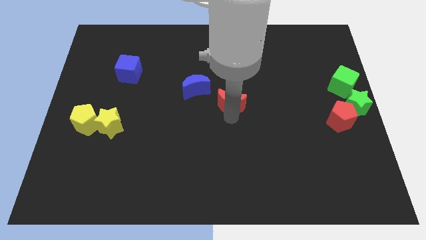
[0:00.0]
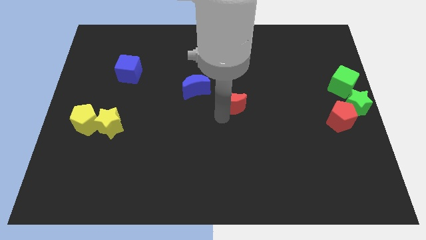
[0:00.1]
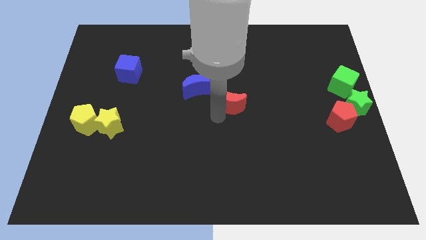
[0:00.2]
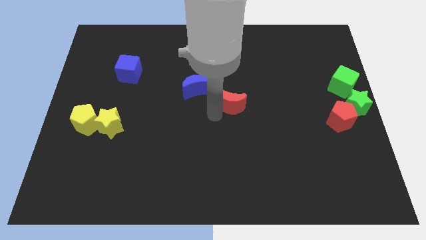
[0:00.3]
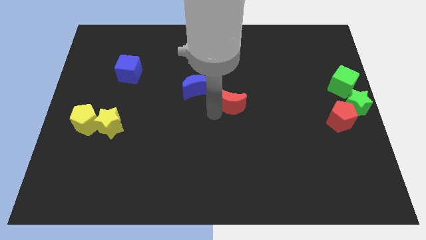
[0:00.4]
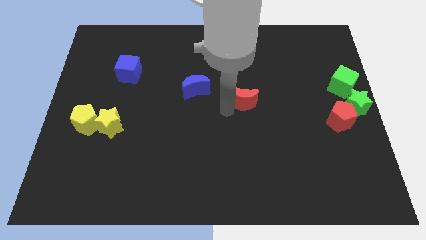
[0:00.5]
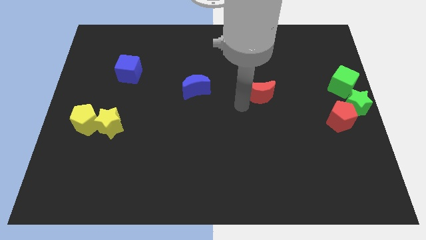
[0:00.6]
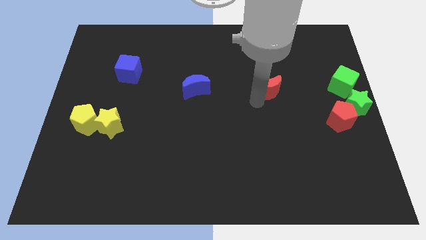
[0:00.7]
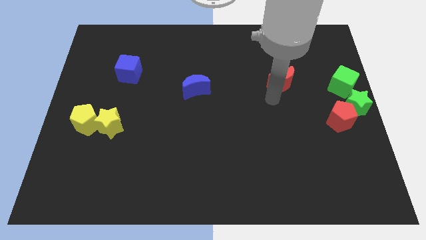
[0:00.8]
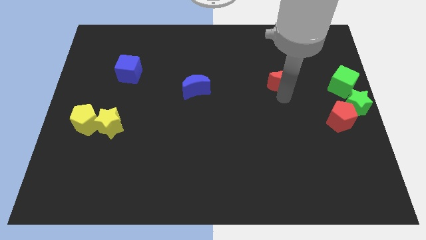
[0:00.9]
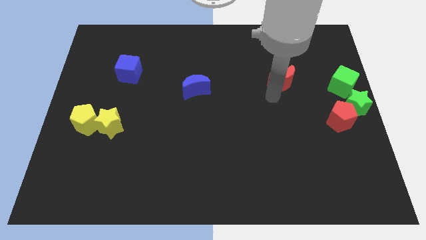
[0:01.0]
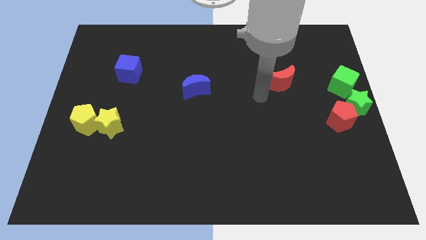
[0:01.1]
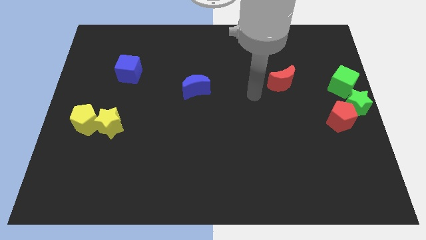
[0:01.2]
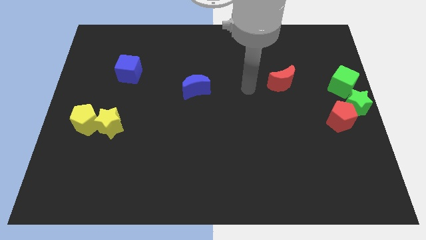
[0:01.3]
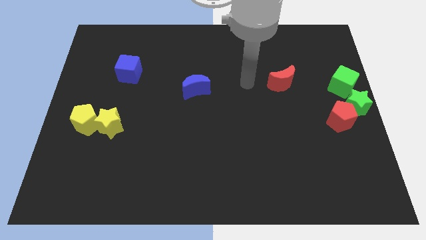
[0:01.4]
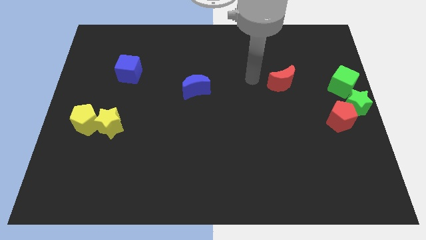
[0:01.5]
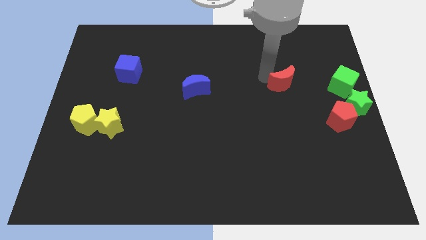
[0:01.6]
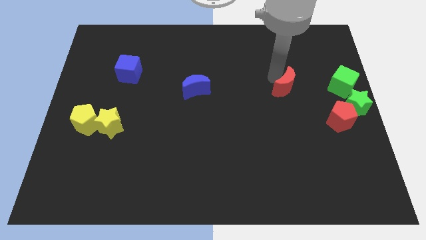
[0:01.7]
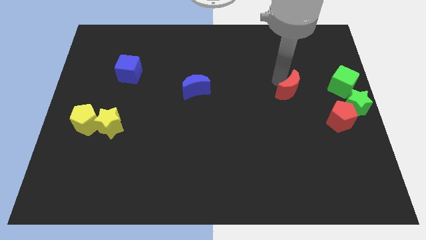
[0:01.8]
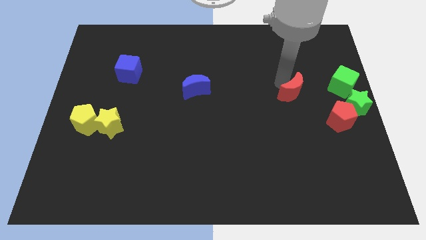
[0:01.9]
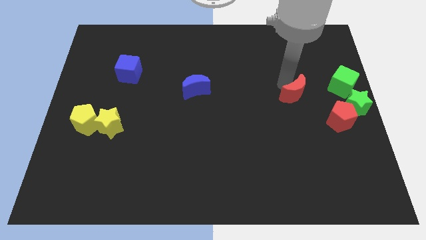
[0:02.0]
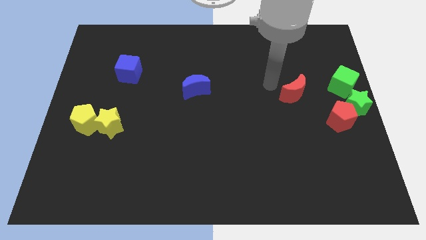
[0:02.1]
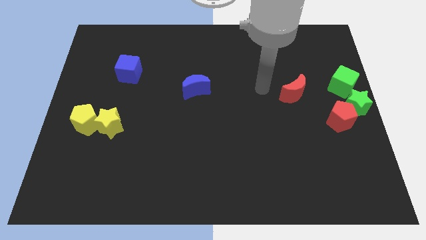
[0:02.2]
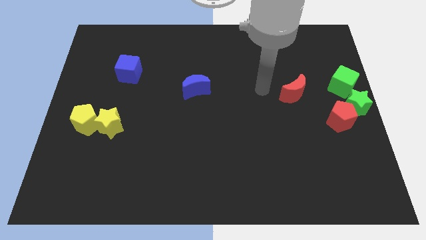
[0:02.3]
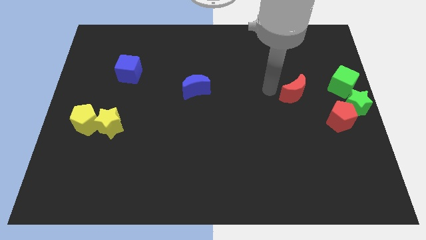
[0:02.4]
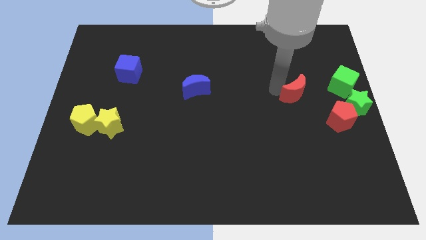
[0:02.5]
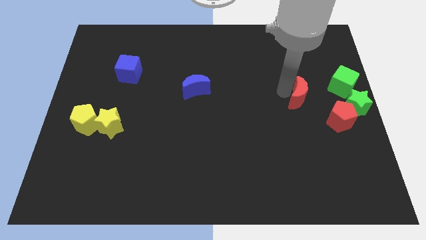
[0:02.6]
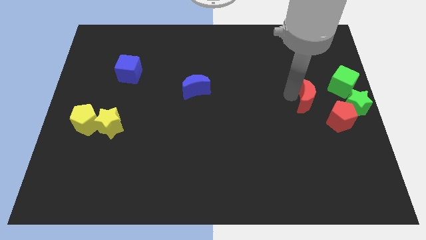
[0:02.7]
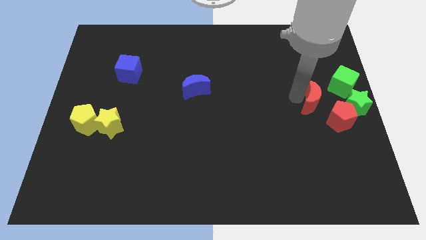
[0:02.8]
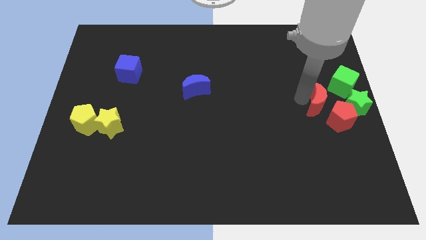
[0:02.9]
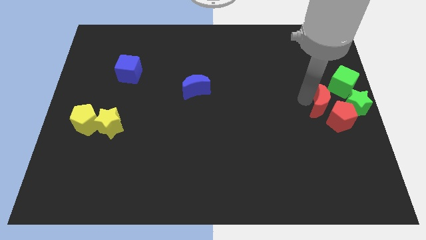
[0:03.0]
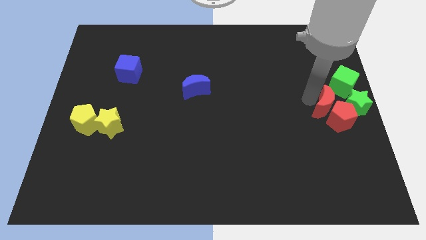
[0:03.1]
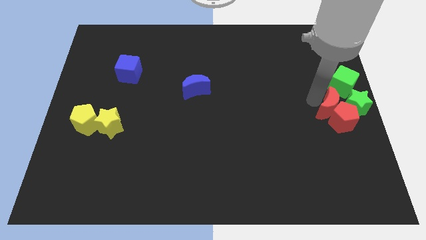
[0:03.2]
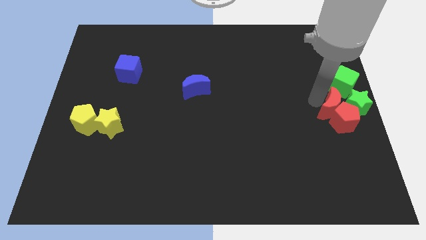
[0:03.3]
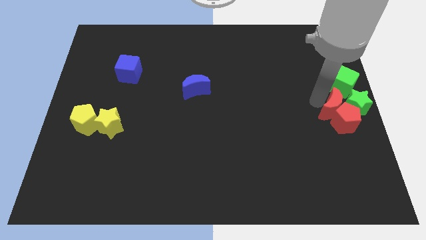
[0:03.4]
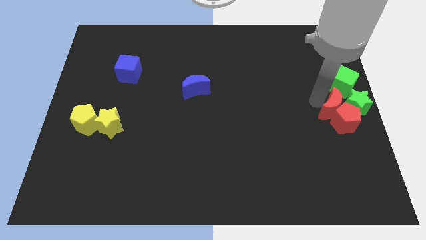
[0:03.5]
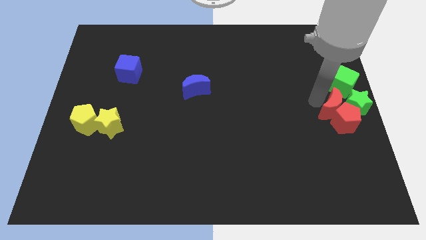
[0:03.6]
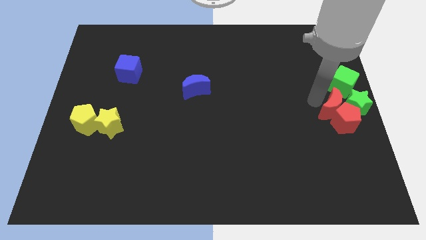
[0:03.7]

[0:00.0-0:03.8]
push red crescent beside green star

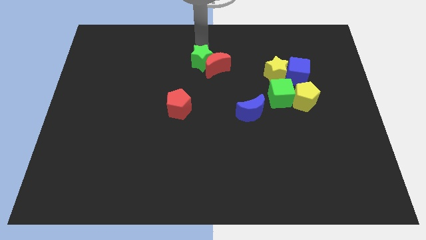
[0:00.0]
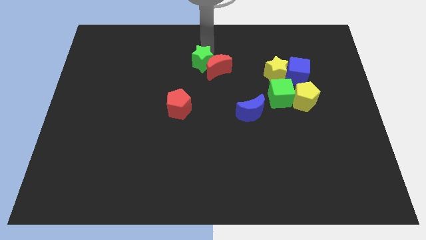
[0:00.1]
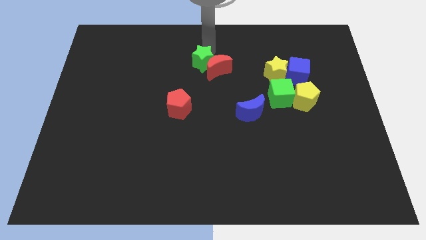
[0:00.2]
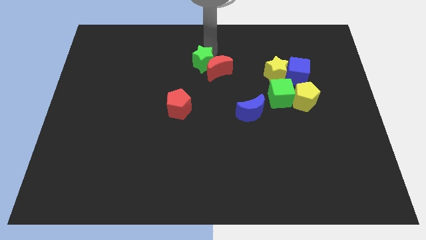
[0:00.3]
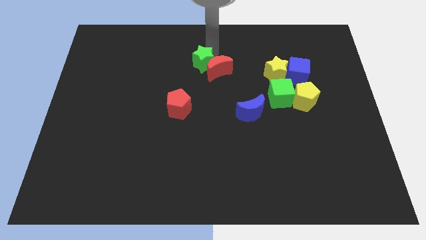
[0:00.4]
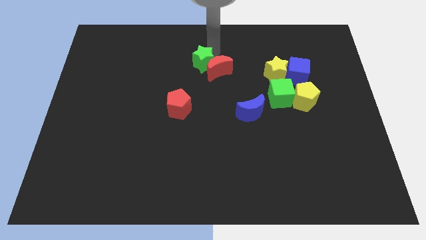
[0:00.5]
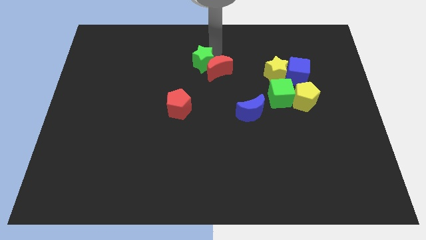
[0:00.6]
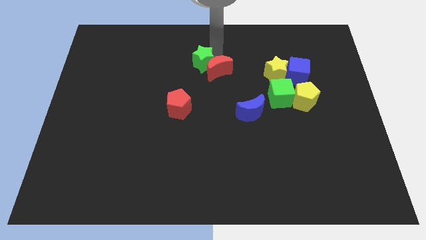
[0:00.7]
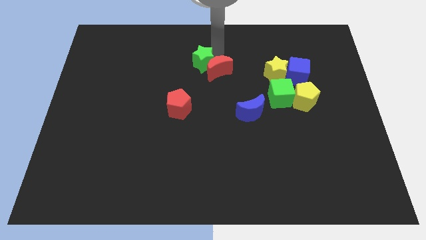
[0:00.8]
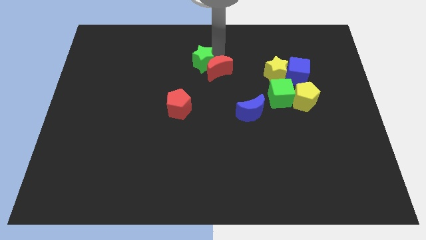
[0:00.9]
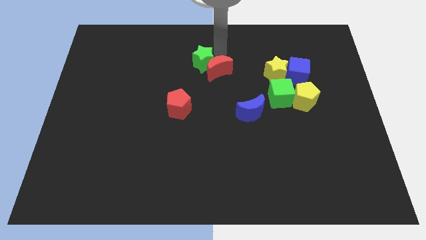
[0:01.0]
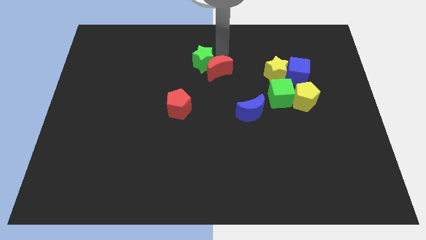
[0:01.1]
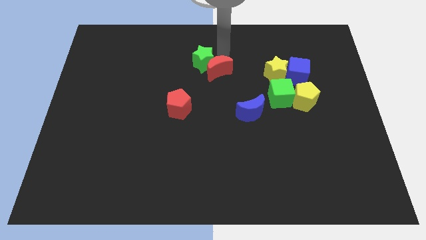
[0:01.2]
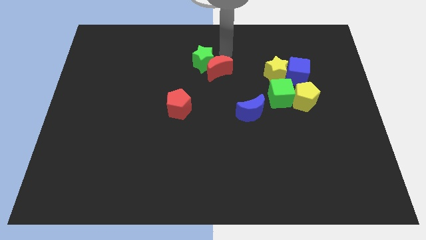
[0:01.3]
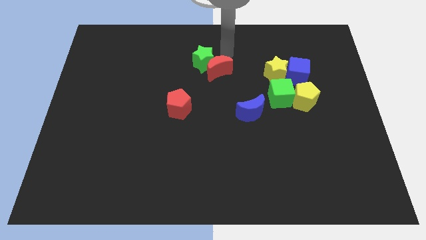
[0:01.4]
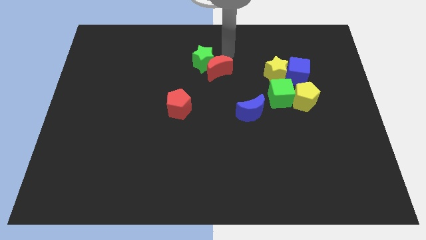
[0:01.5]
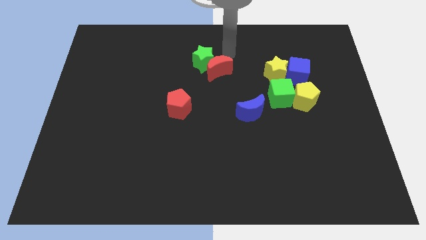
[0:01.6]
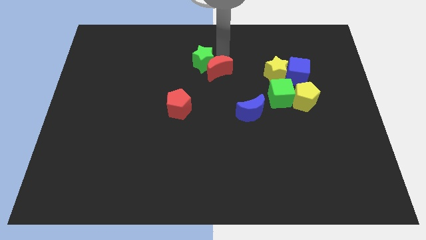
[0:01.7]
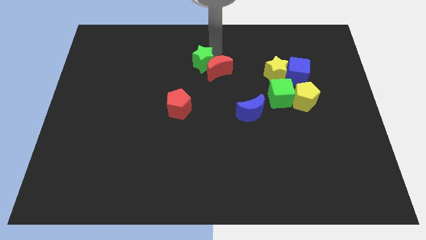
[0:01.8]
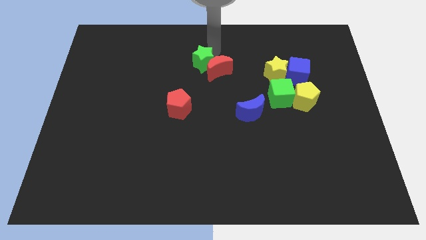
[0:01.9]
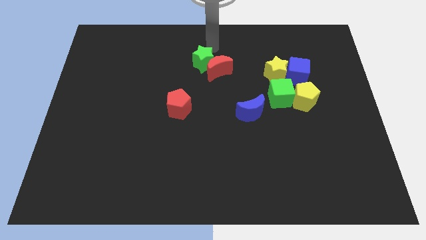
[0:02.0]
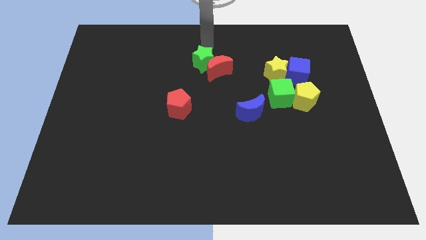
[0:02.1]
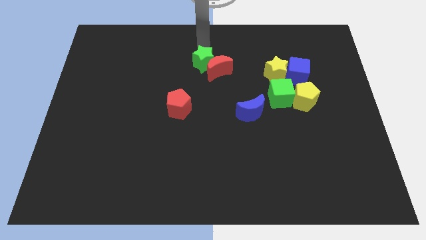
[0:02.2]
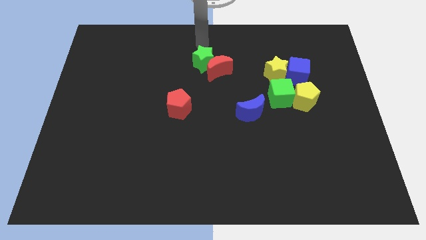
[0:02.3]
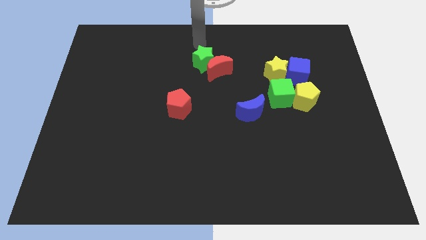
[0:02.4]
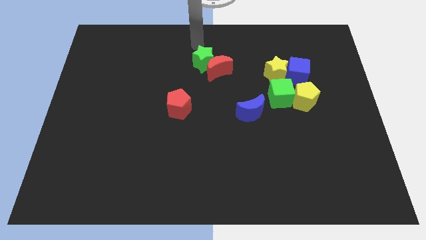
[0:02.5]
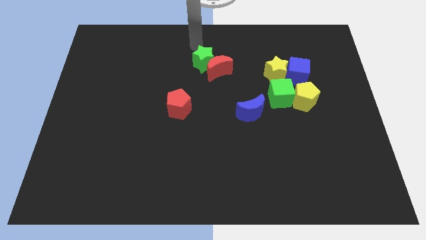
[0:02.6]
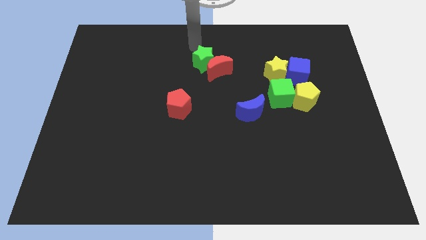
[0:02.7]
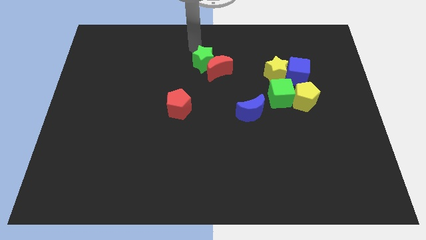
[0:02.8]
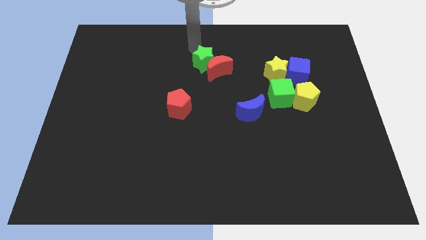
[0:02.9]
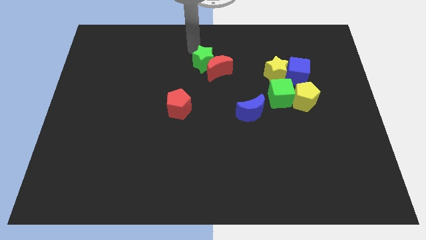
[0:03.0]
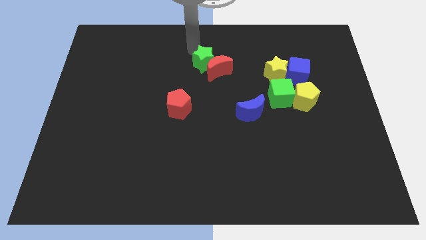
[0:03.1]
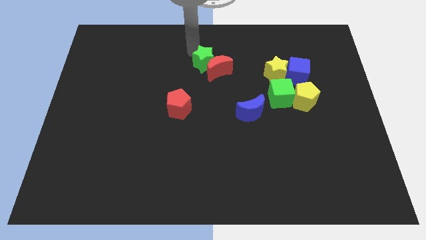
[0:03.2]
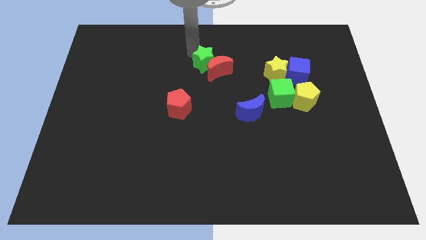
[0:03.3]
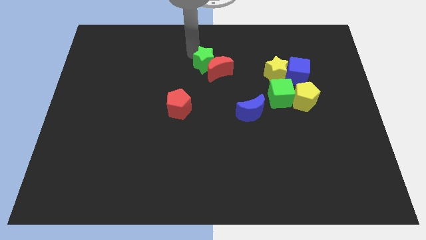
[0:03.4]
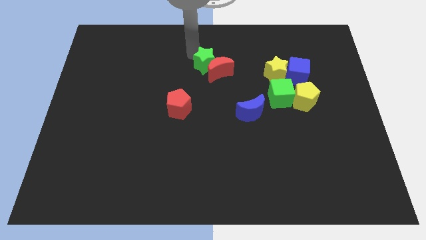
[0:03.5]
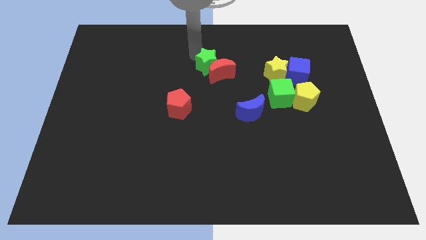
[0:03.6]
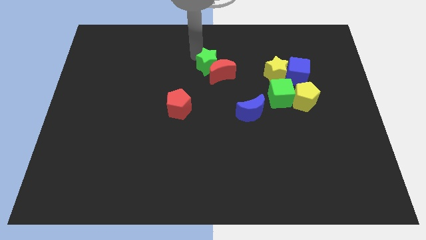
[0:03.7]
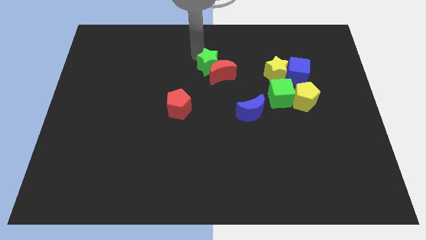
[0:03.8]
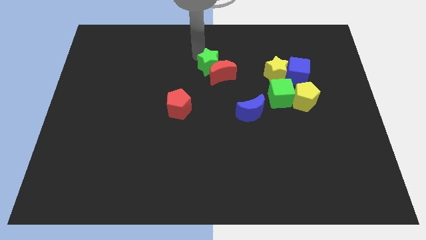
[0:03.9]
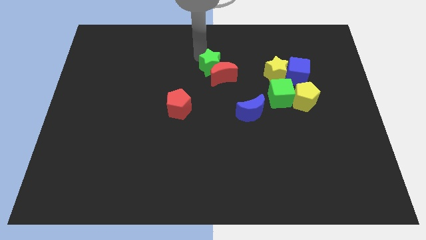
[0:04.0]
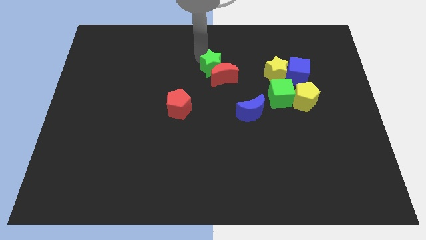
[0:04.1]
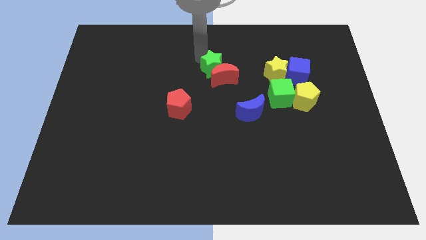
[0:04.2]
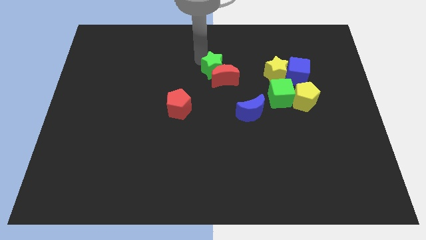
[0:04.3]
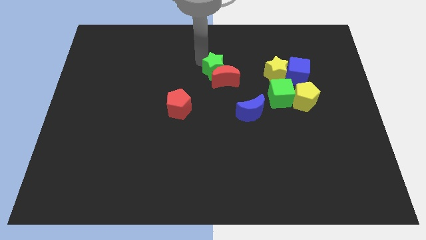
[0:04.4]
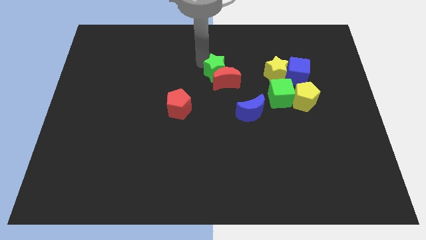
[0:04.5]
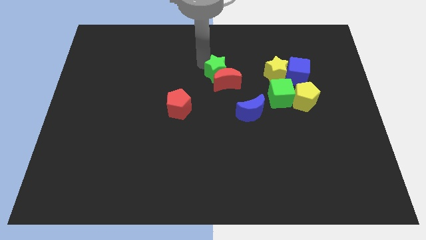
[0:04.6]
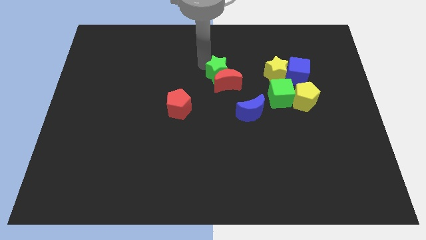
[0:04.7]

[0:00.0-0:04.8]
push the green star slightly down

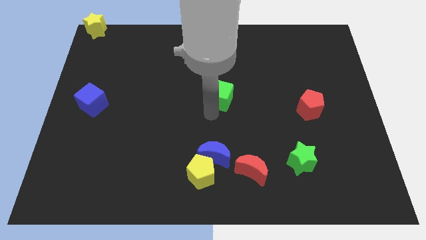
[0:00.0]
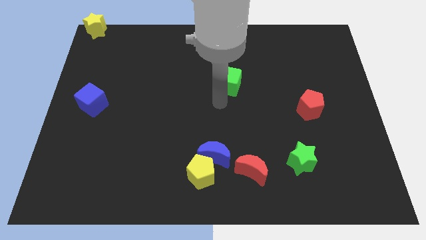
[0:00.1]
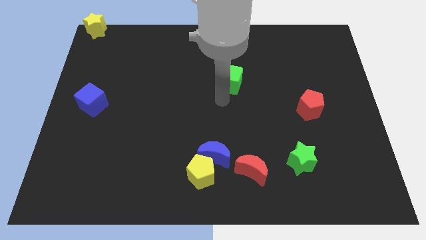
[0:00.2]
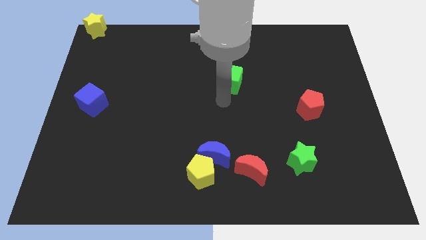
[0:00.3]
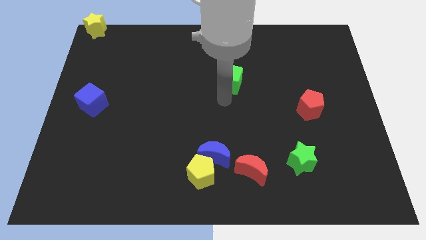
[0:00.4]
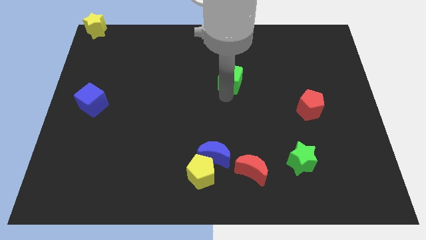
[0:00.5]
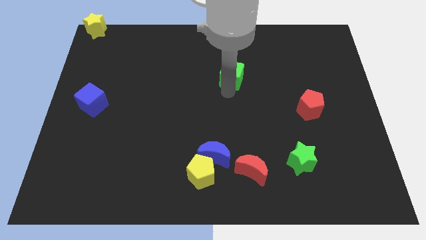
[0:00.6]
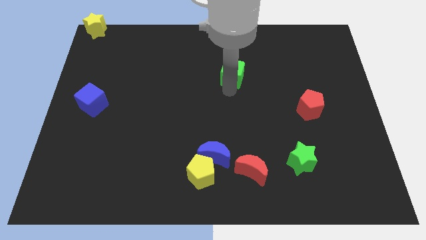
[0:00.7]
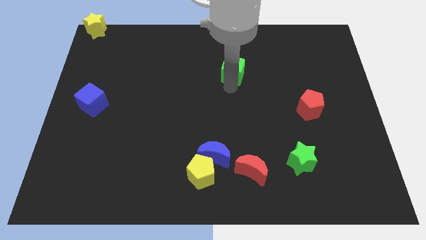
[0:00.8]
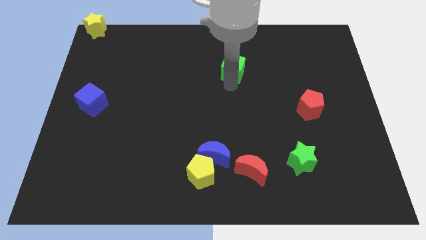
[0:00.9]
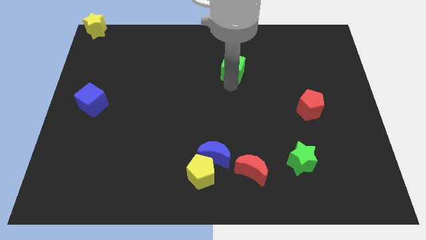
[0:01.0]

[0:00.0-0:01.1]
push green cube slightly towards the top
